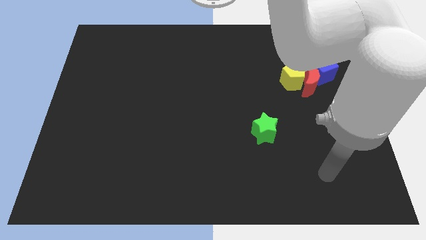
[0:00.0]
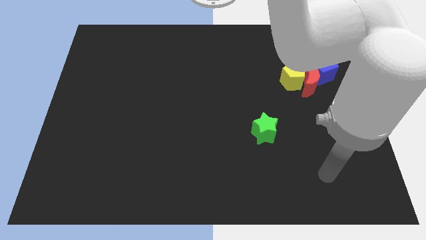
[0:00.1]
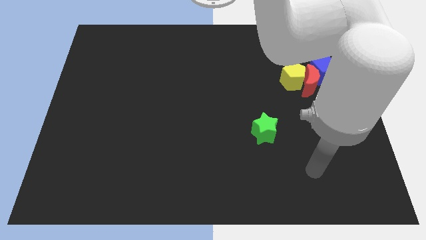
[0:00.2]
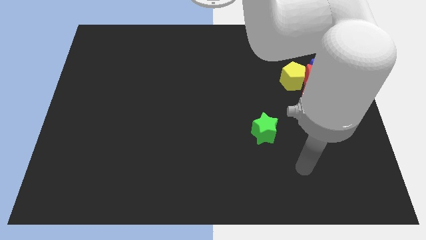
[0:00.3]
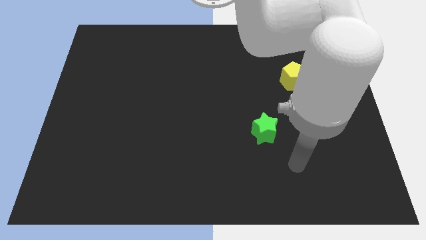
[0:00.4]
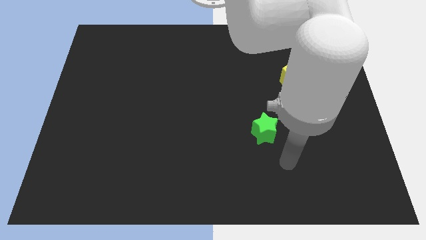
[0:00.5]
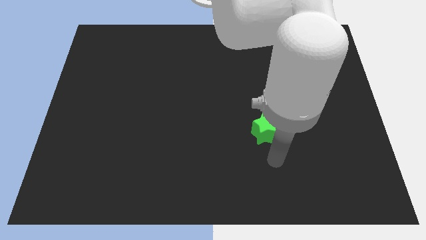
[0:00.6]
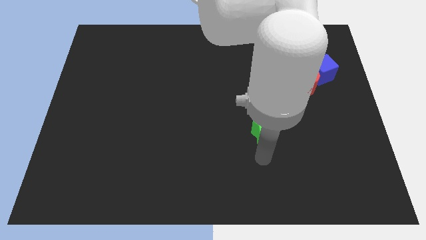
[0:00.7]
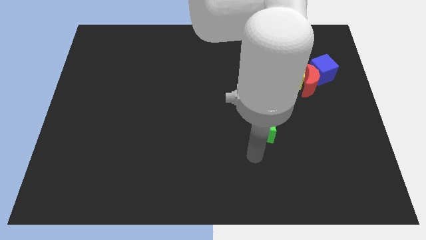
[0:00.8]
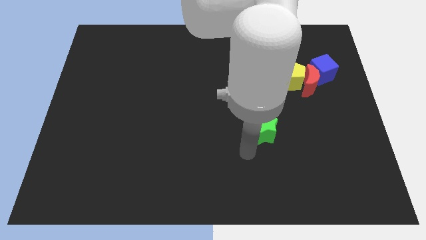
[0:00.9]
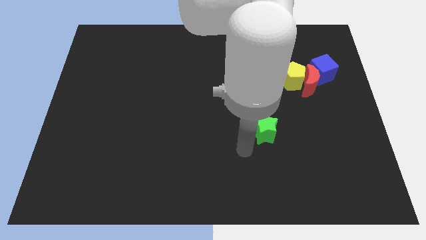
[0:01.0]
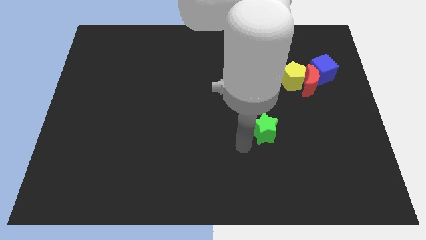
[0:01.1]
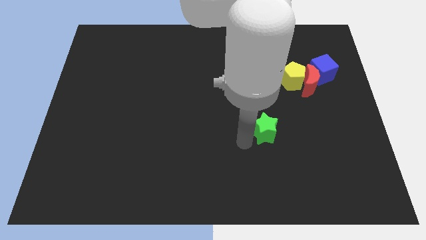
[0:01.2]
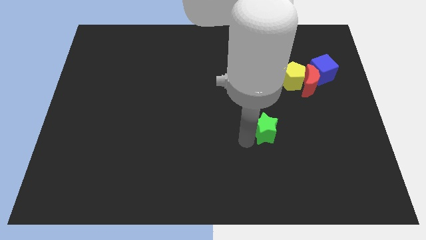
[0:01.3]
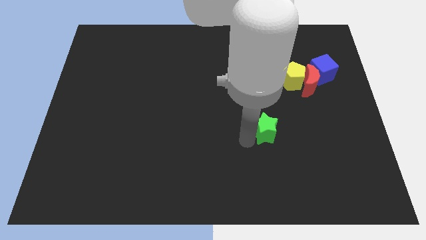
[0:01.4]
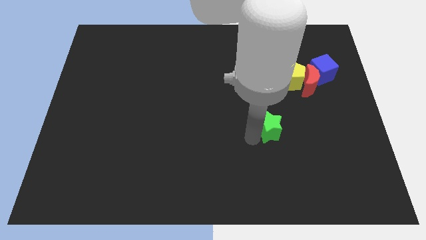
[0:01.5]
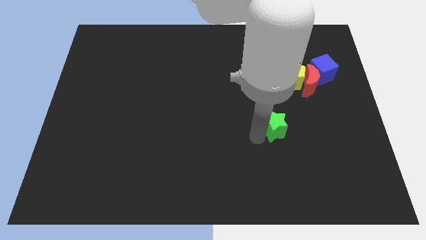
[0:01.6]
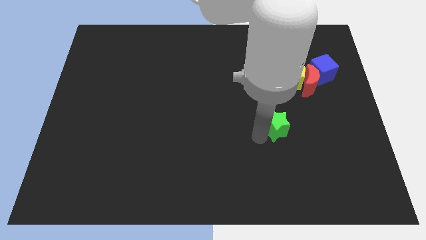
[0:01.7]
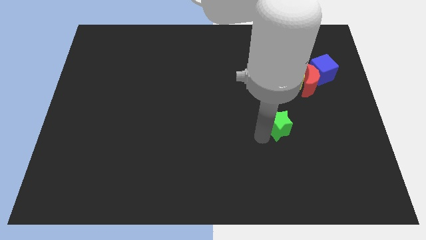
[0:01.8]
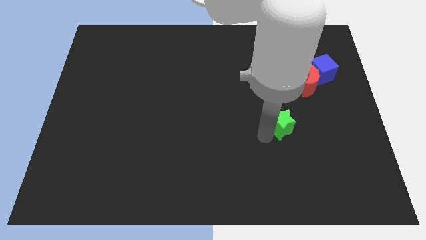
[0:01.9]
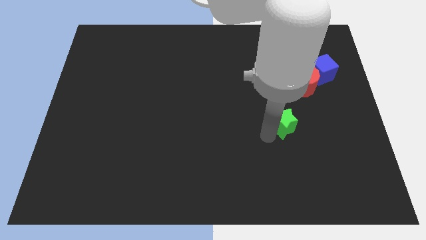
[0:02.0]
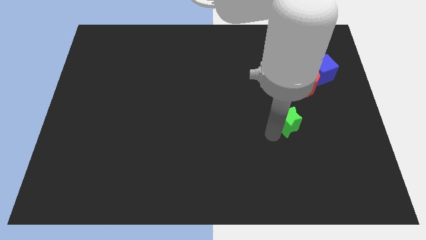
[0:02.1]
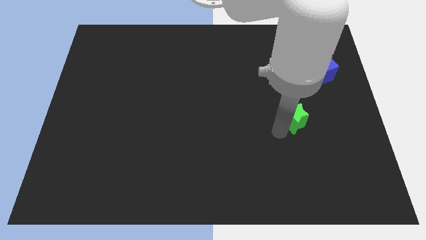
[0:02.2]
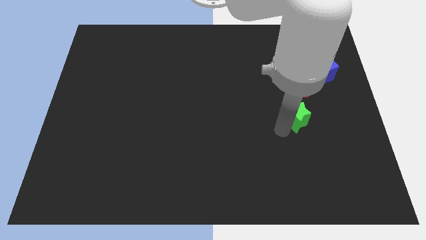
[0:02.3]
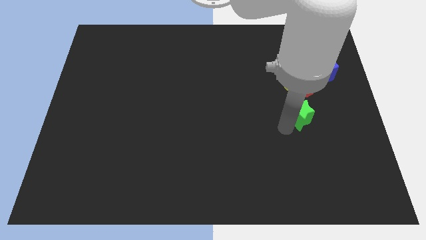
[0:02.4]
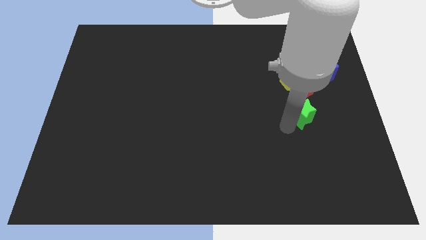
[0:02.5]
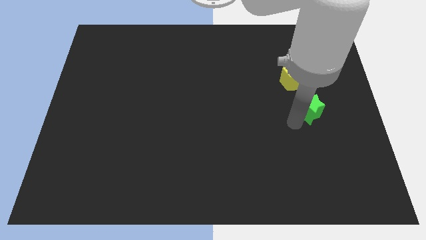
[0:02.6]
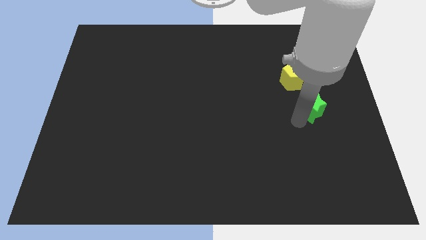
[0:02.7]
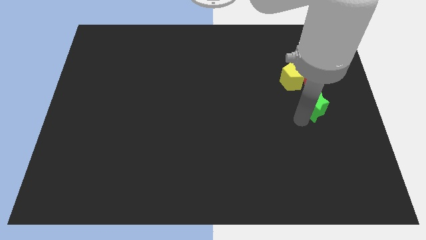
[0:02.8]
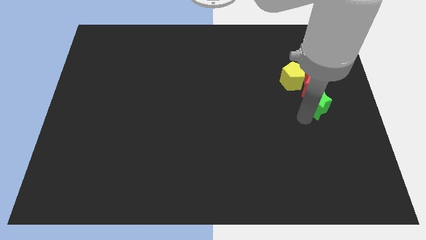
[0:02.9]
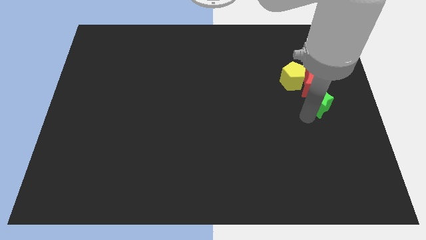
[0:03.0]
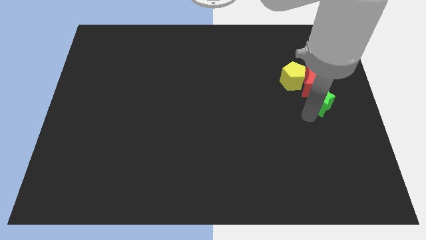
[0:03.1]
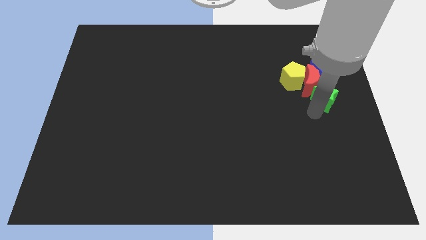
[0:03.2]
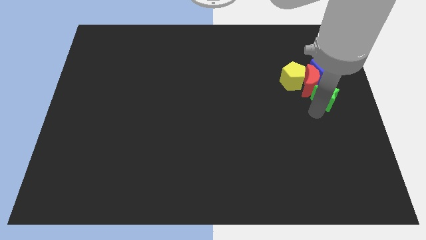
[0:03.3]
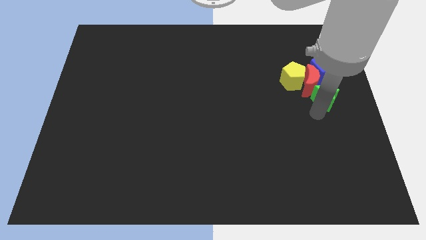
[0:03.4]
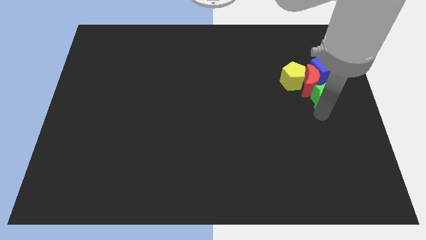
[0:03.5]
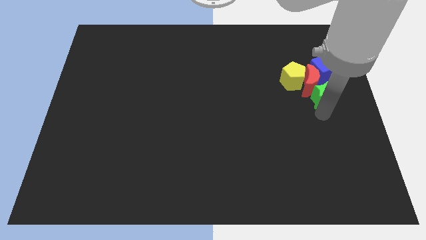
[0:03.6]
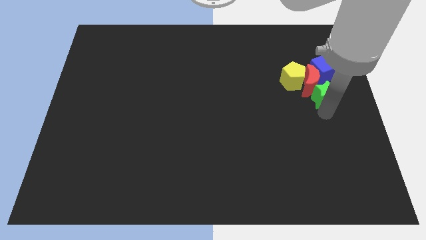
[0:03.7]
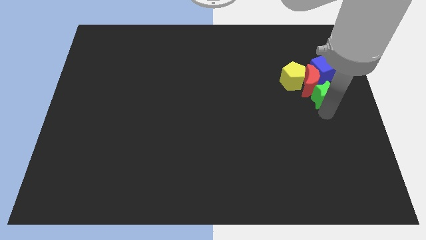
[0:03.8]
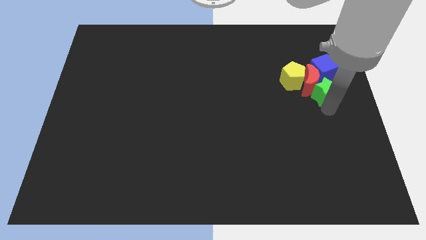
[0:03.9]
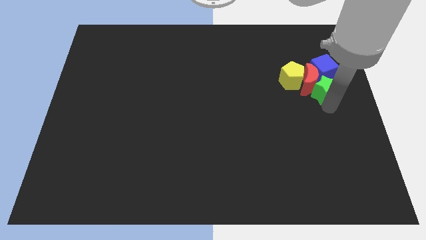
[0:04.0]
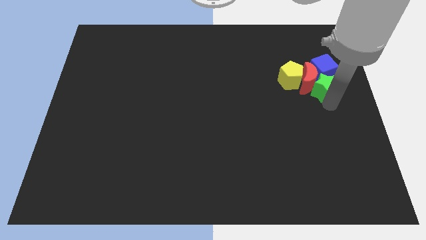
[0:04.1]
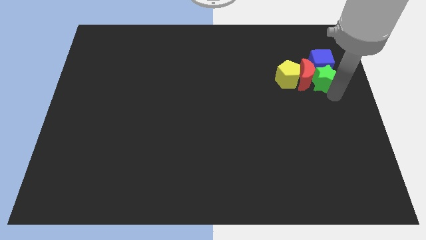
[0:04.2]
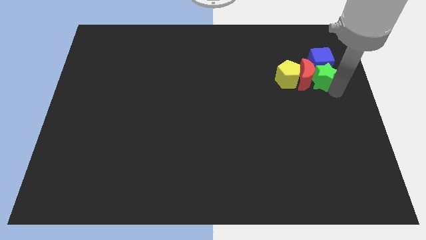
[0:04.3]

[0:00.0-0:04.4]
move the green star close to the blue cube

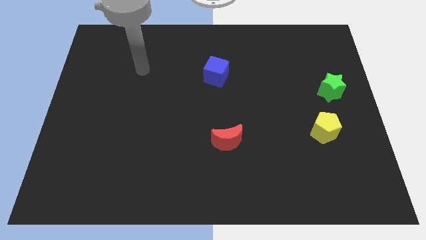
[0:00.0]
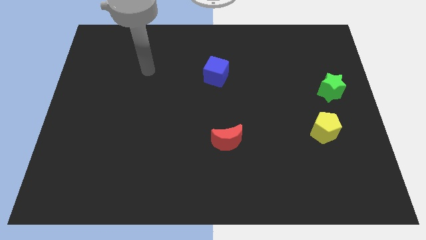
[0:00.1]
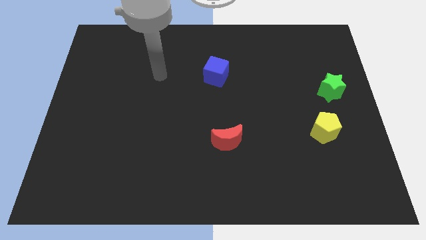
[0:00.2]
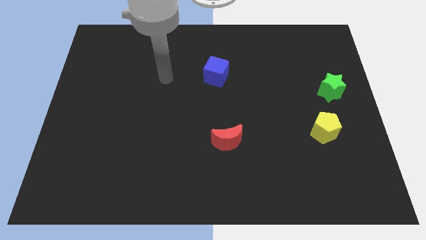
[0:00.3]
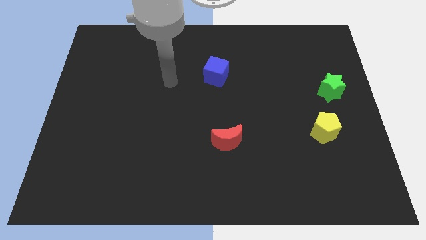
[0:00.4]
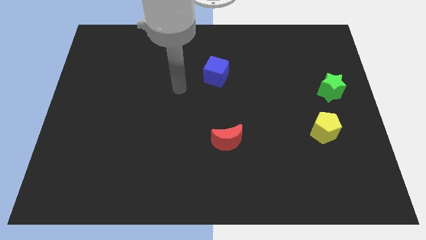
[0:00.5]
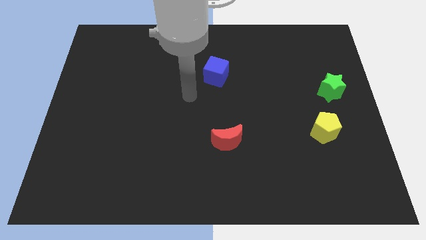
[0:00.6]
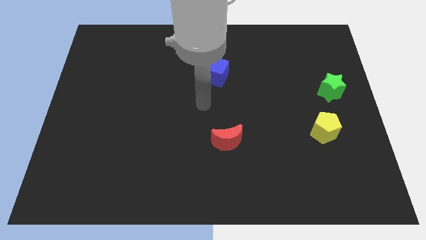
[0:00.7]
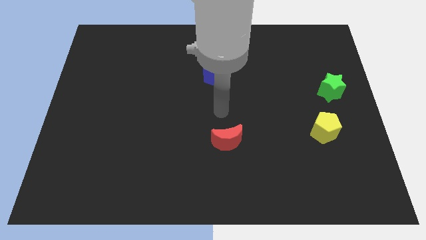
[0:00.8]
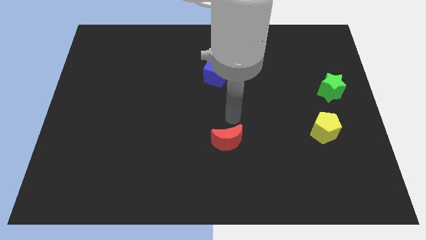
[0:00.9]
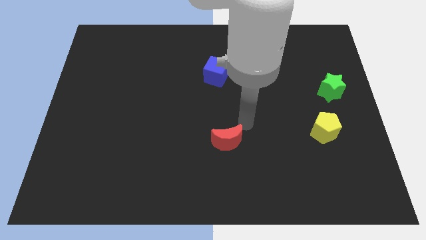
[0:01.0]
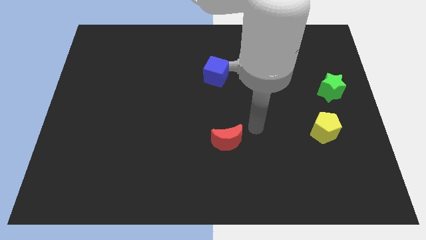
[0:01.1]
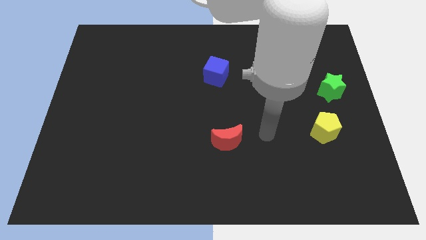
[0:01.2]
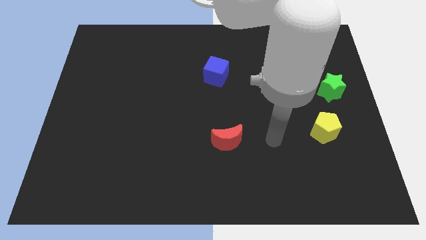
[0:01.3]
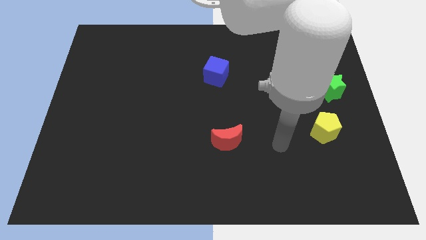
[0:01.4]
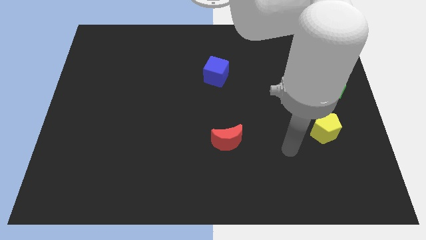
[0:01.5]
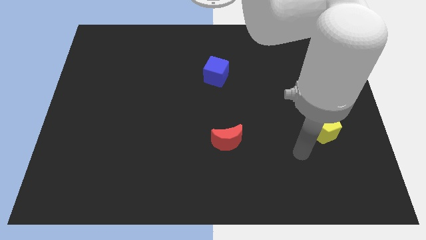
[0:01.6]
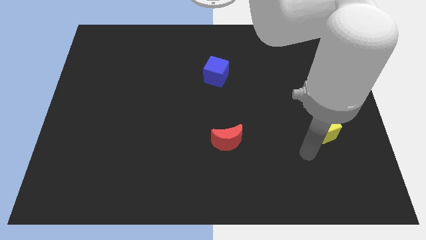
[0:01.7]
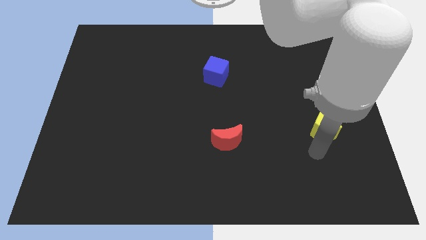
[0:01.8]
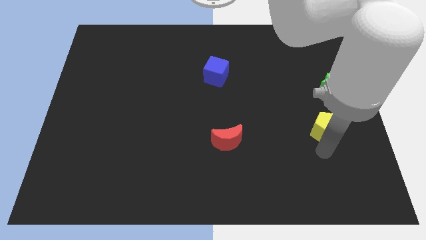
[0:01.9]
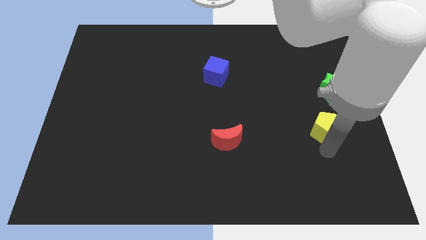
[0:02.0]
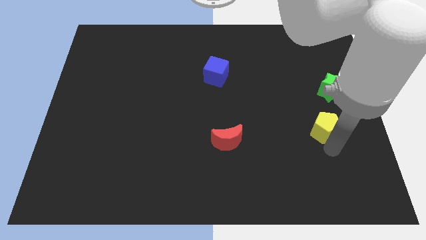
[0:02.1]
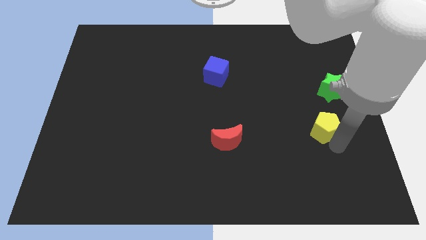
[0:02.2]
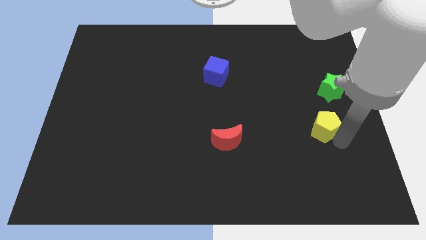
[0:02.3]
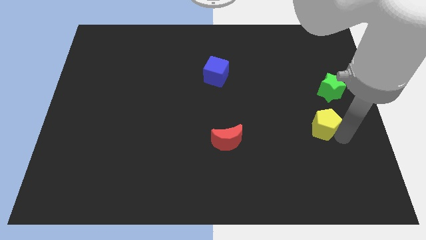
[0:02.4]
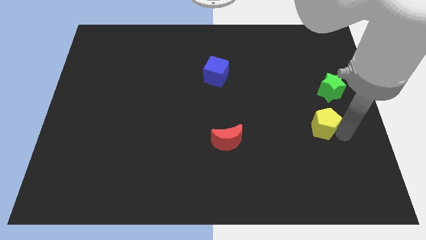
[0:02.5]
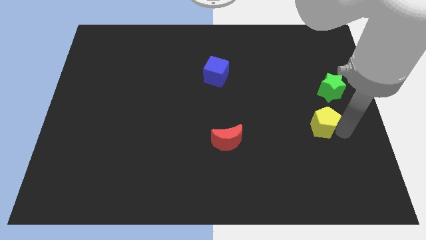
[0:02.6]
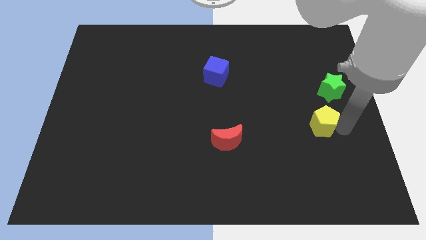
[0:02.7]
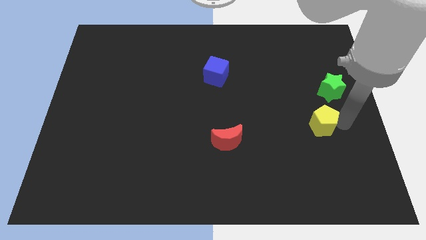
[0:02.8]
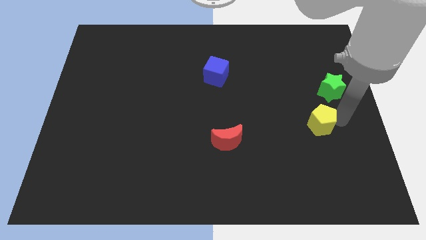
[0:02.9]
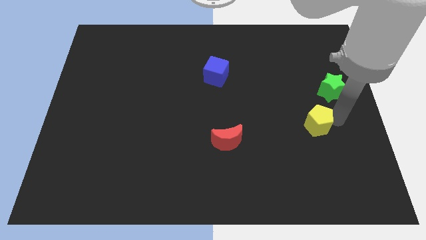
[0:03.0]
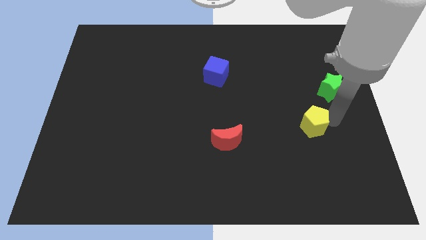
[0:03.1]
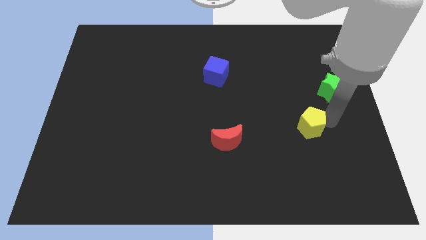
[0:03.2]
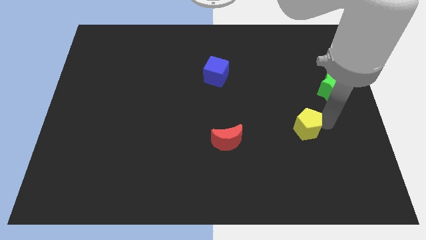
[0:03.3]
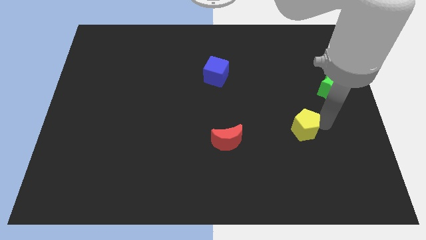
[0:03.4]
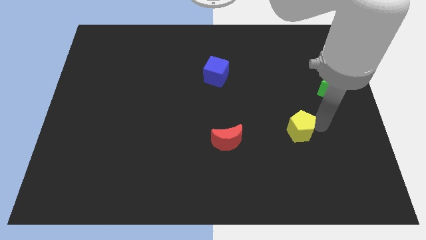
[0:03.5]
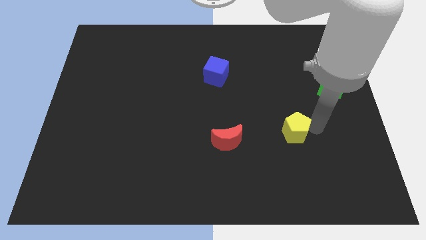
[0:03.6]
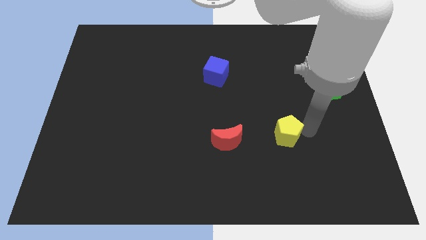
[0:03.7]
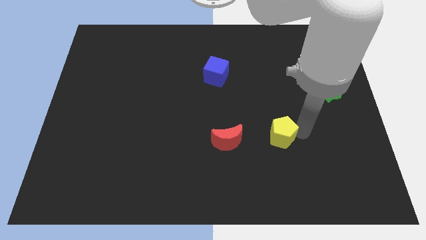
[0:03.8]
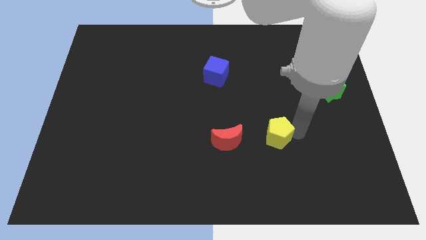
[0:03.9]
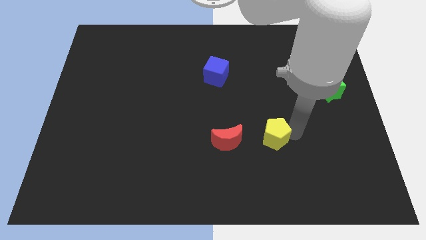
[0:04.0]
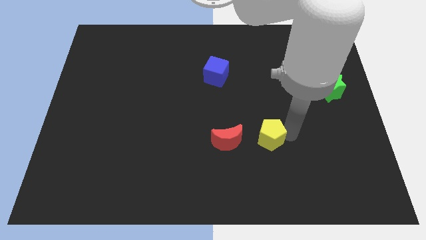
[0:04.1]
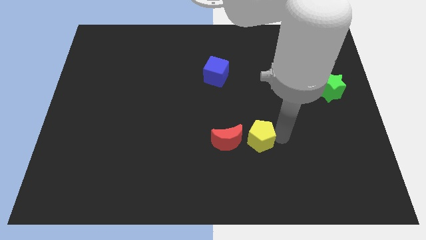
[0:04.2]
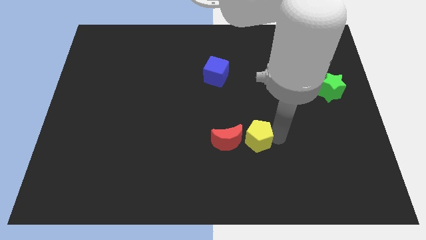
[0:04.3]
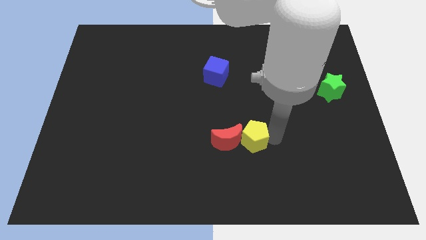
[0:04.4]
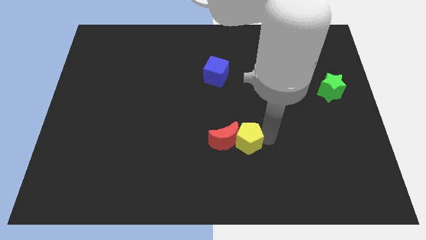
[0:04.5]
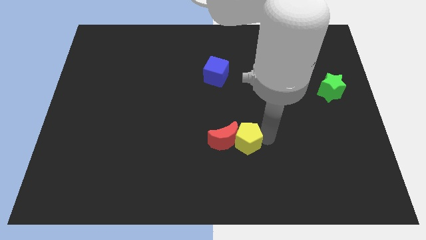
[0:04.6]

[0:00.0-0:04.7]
slide the pentagon towards the moon
